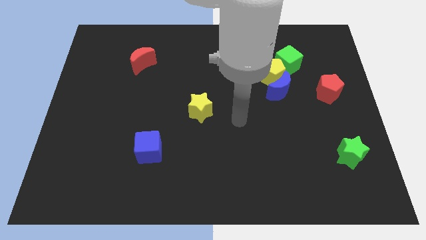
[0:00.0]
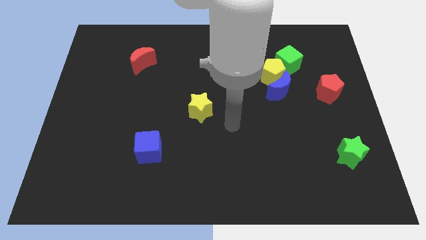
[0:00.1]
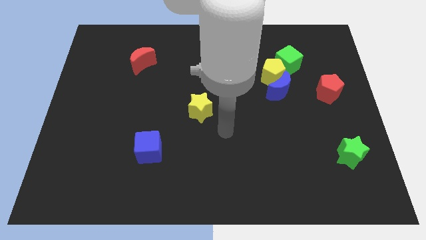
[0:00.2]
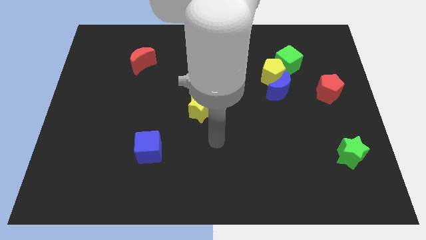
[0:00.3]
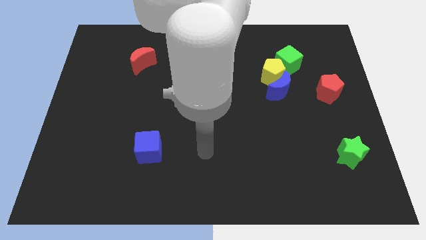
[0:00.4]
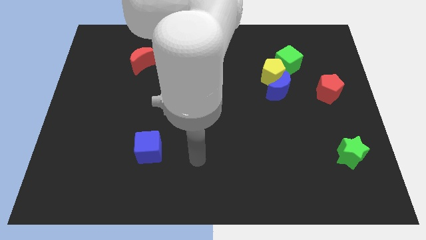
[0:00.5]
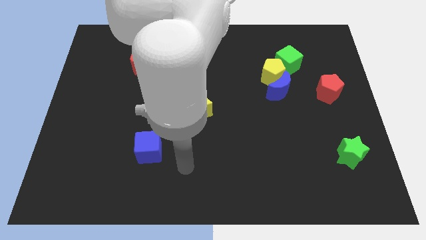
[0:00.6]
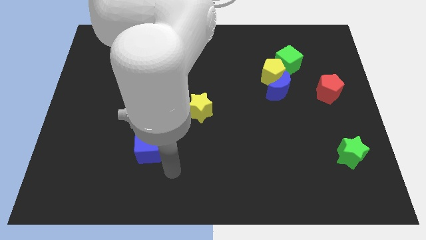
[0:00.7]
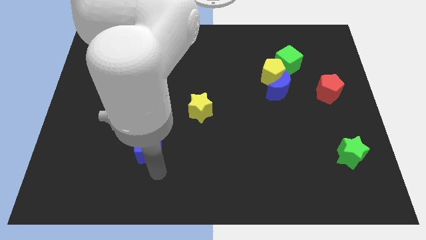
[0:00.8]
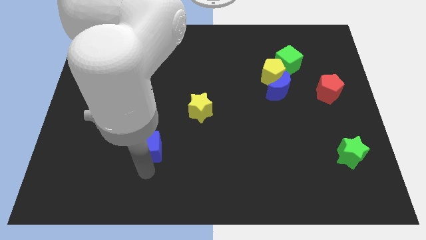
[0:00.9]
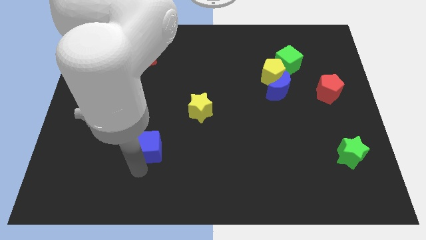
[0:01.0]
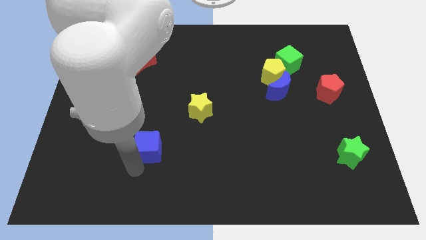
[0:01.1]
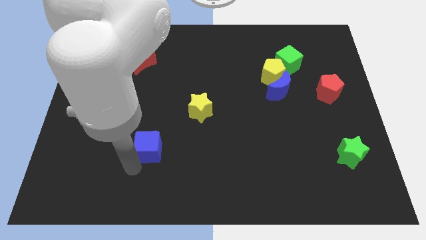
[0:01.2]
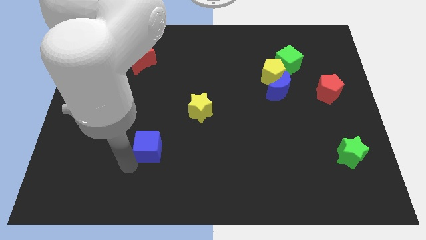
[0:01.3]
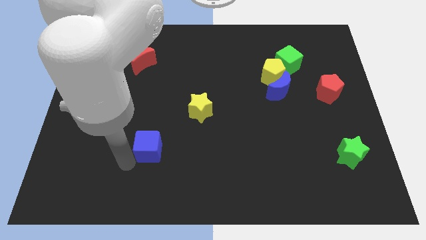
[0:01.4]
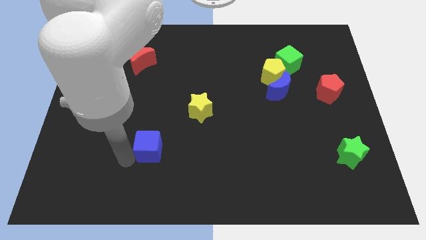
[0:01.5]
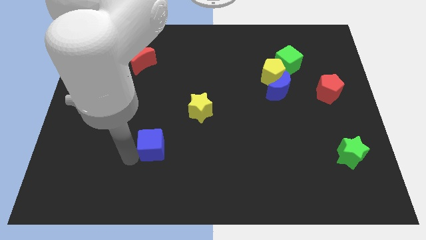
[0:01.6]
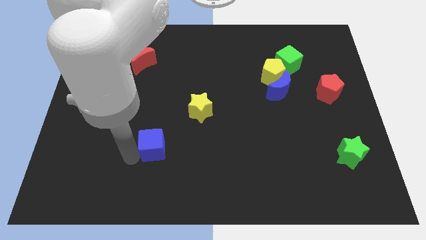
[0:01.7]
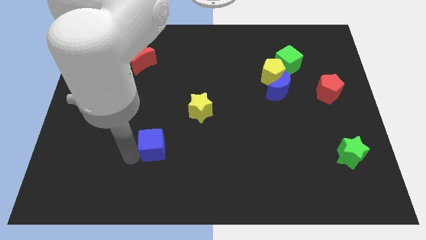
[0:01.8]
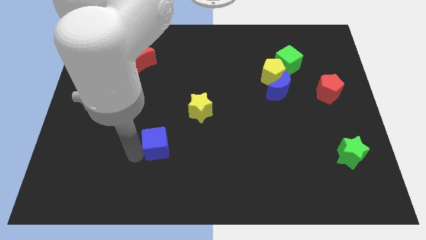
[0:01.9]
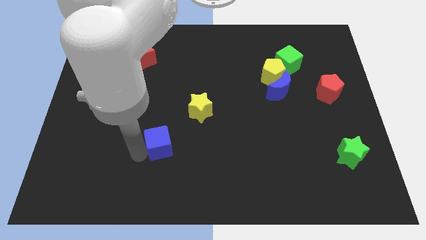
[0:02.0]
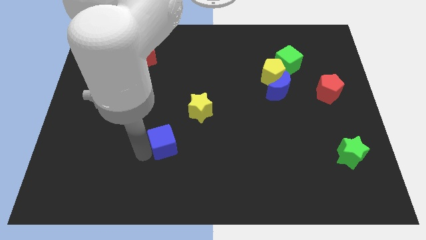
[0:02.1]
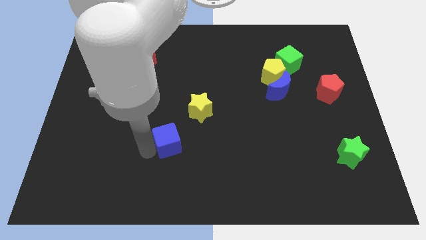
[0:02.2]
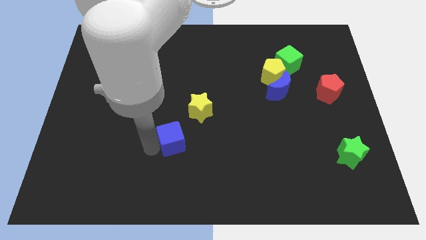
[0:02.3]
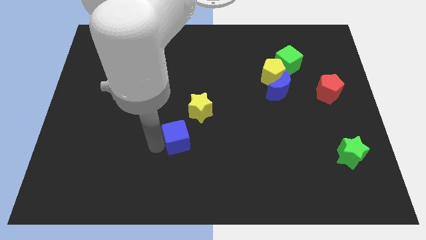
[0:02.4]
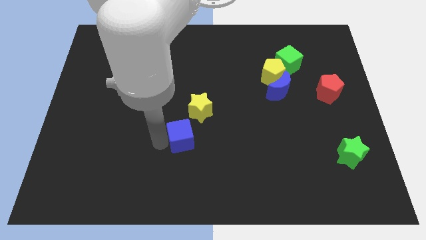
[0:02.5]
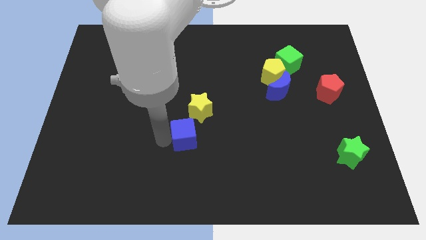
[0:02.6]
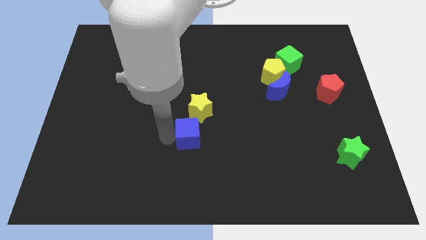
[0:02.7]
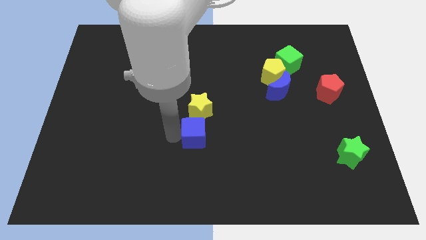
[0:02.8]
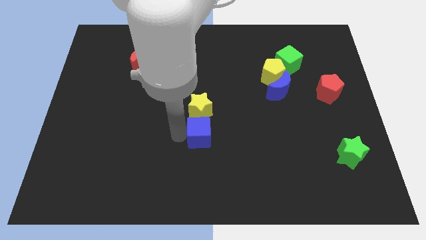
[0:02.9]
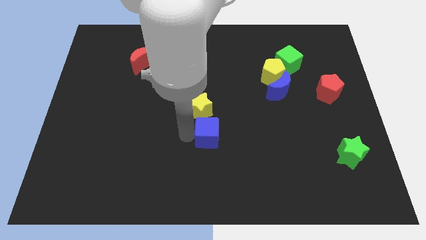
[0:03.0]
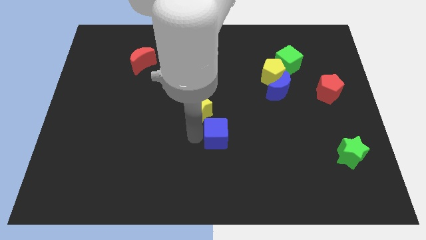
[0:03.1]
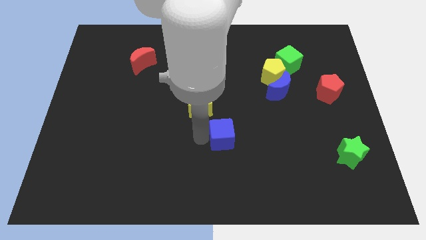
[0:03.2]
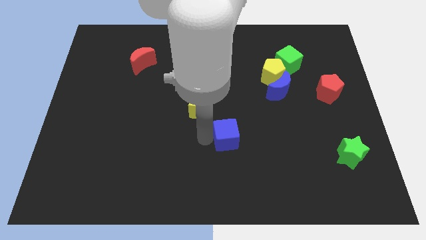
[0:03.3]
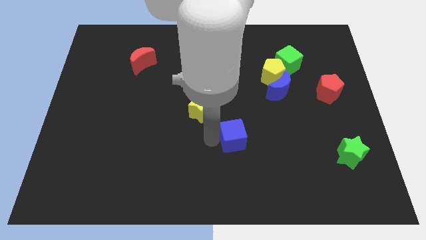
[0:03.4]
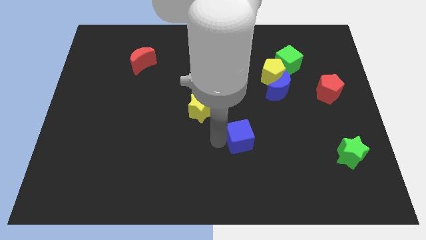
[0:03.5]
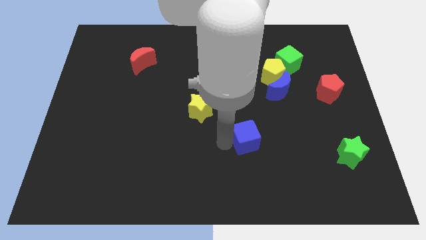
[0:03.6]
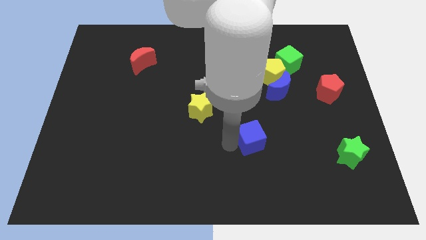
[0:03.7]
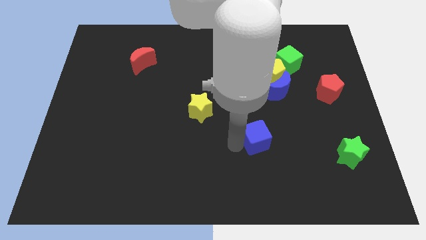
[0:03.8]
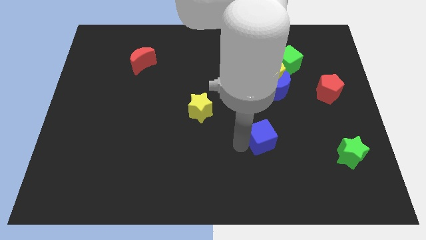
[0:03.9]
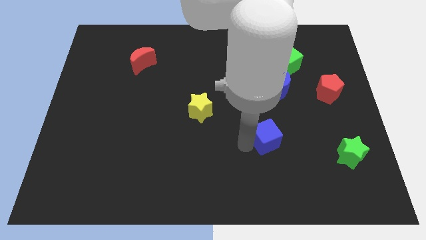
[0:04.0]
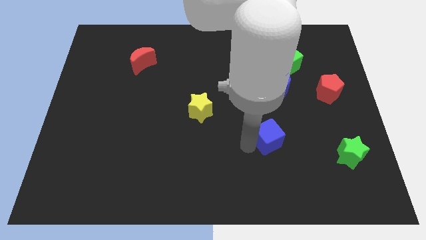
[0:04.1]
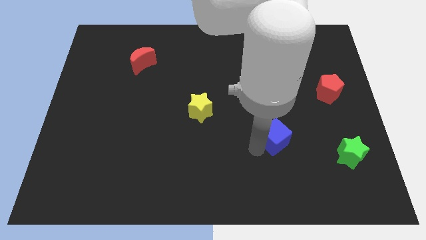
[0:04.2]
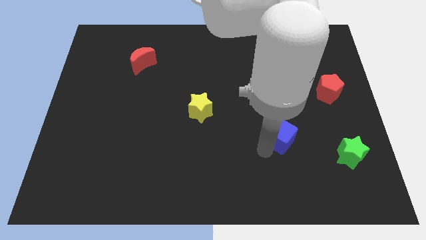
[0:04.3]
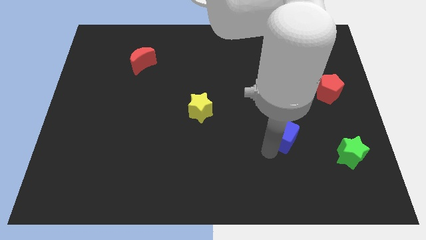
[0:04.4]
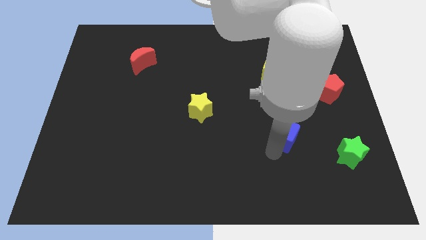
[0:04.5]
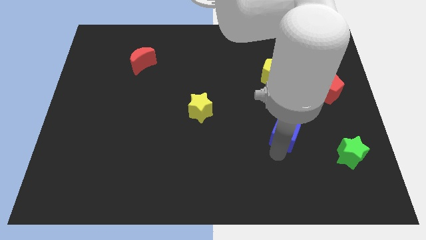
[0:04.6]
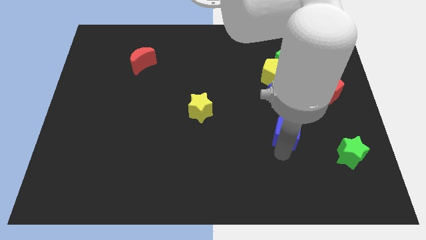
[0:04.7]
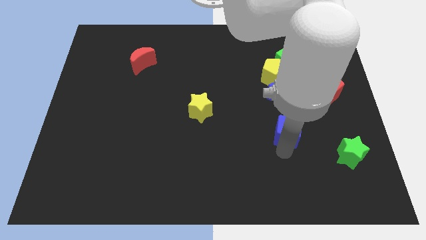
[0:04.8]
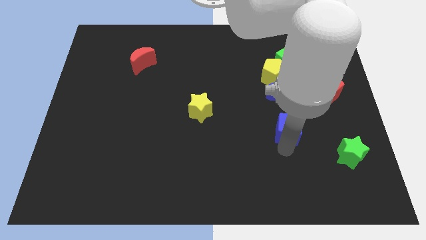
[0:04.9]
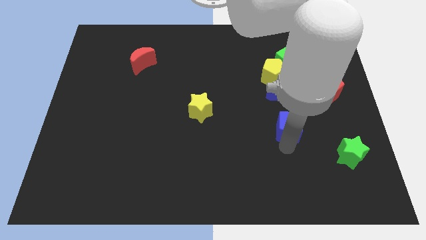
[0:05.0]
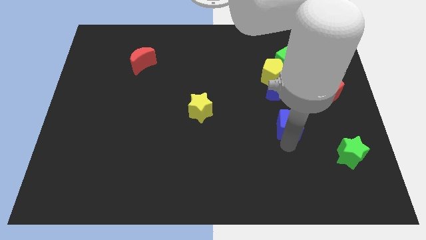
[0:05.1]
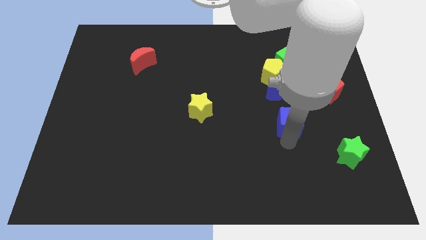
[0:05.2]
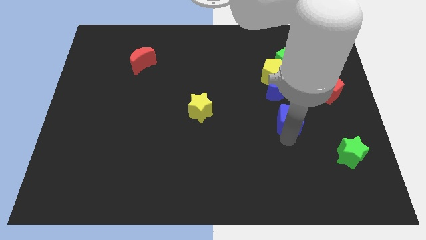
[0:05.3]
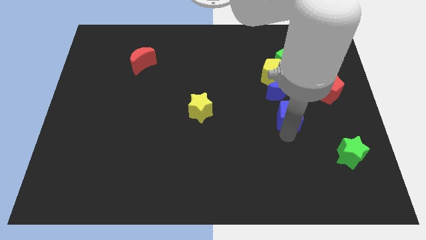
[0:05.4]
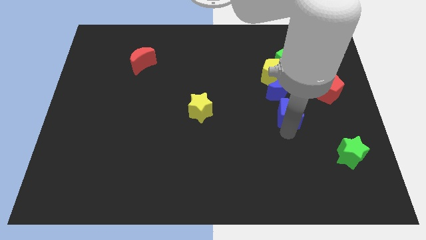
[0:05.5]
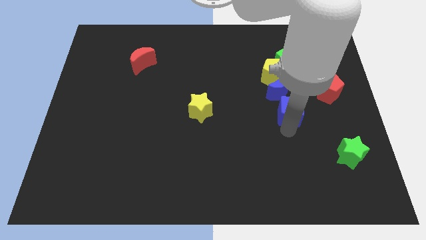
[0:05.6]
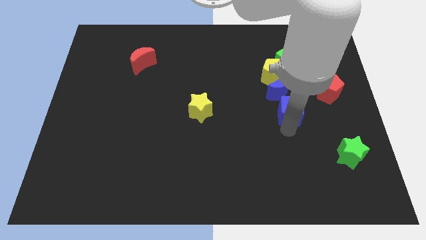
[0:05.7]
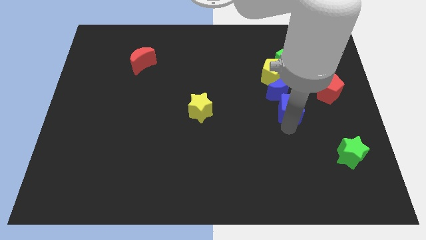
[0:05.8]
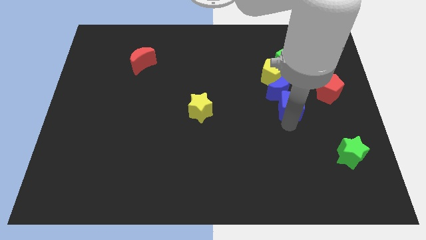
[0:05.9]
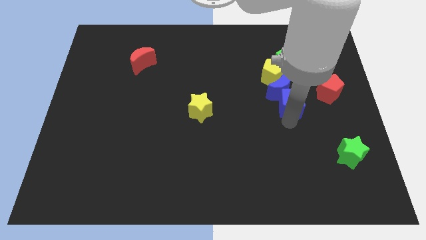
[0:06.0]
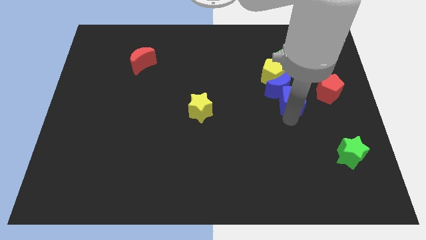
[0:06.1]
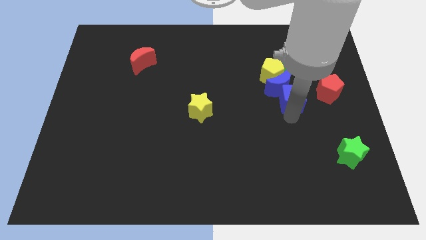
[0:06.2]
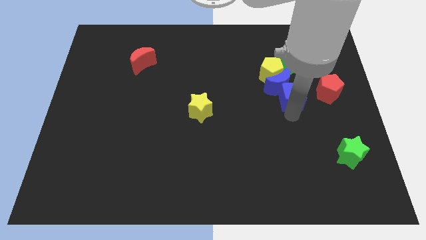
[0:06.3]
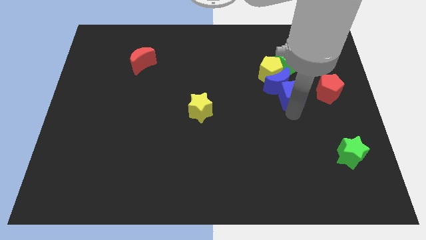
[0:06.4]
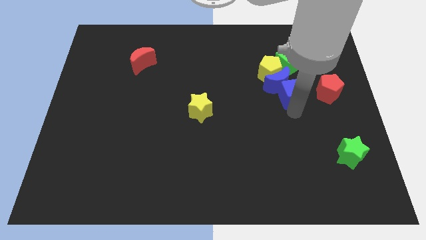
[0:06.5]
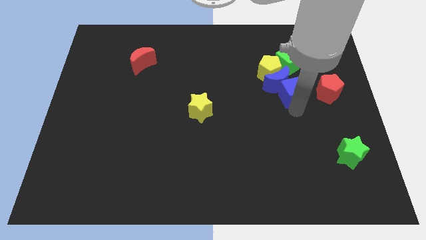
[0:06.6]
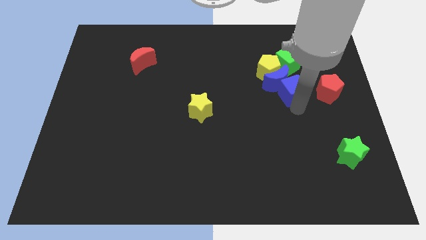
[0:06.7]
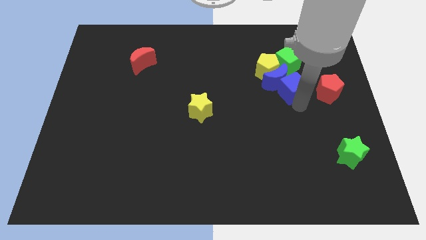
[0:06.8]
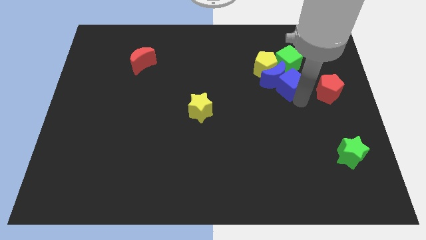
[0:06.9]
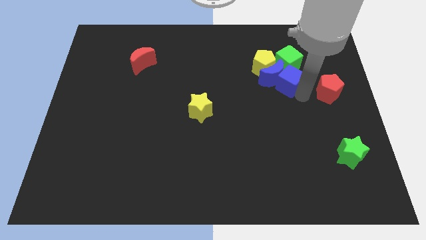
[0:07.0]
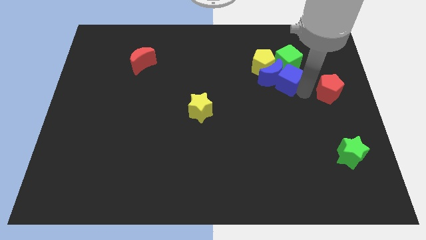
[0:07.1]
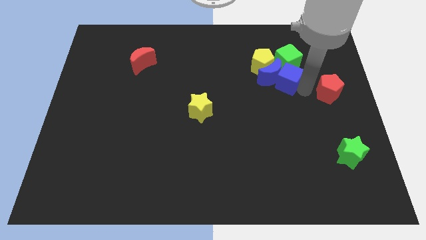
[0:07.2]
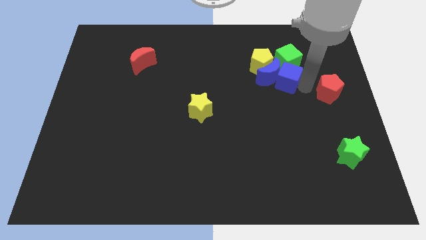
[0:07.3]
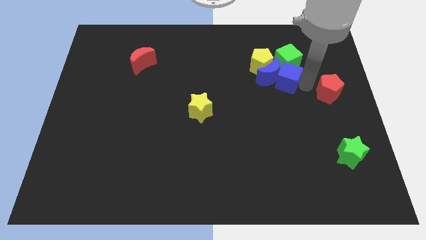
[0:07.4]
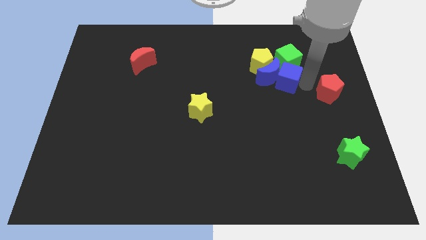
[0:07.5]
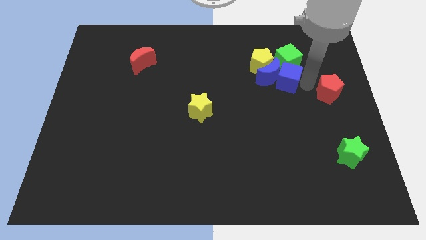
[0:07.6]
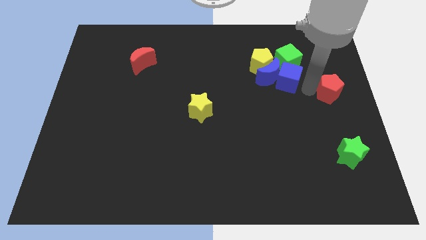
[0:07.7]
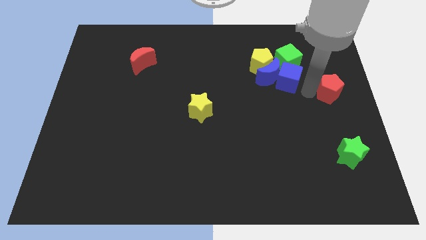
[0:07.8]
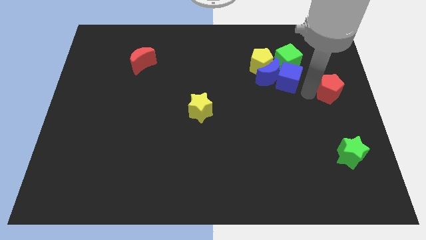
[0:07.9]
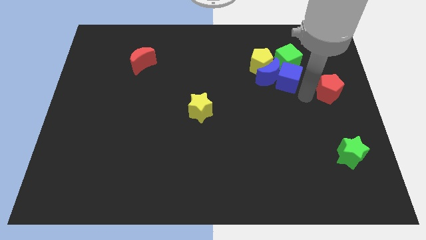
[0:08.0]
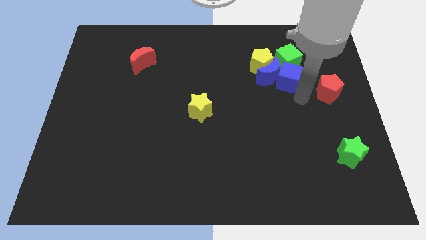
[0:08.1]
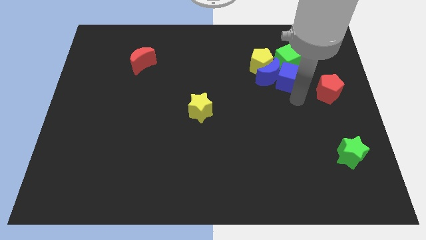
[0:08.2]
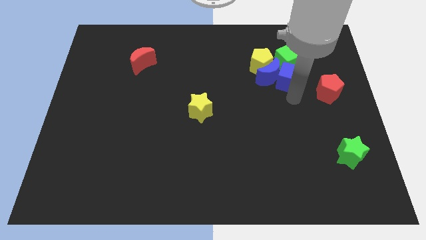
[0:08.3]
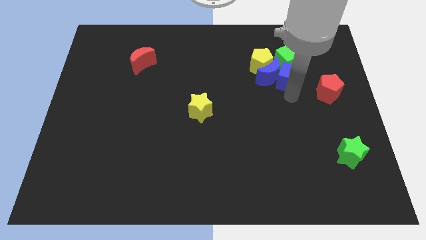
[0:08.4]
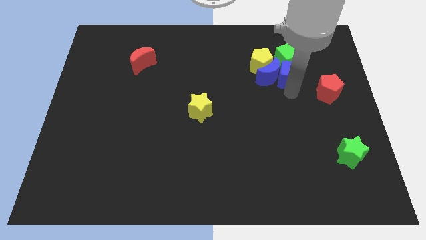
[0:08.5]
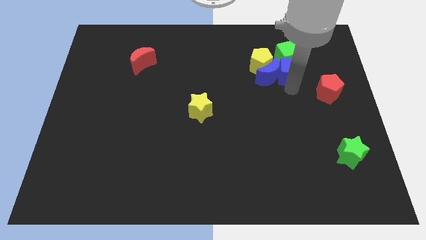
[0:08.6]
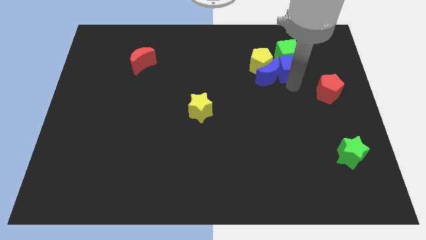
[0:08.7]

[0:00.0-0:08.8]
move the blue cube close to the green cube
